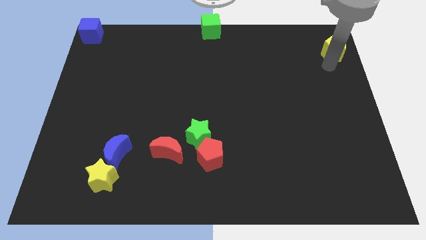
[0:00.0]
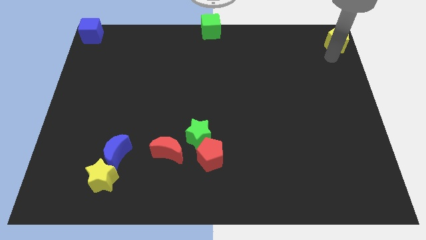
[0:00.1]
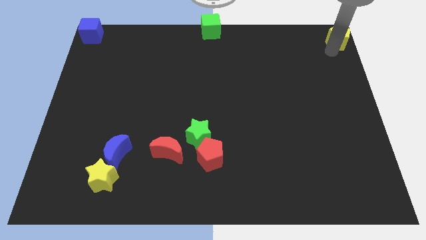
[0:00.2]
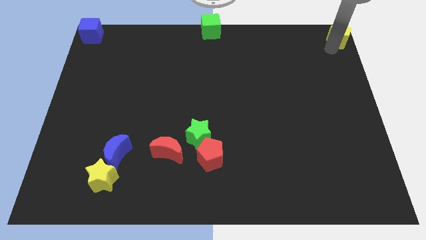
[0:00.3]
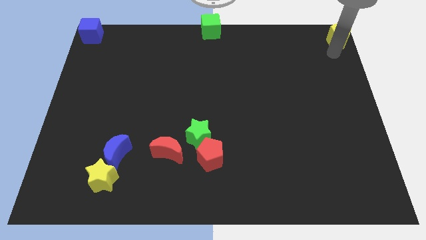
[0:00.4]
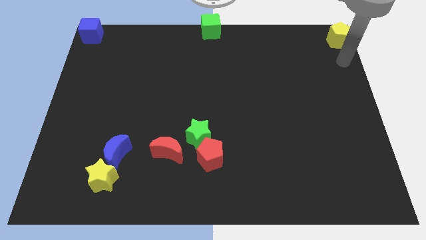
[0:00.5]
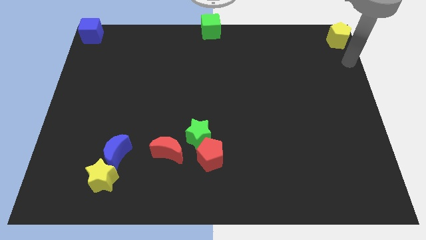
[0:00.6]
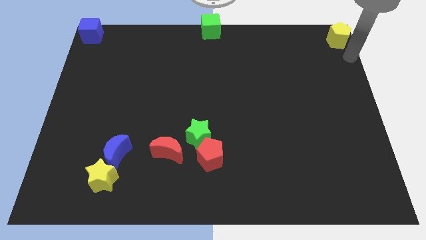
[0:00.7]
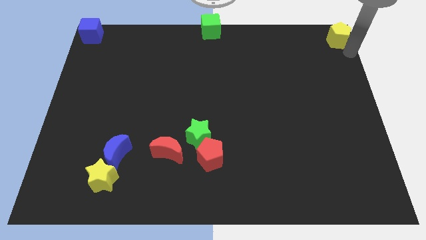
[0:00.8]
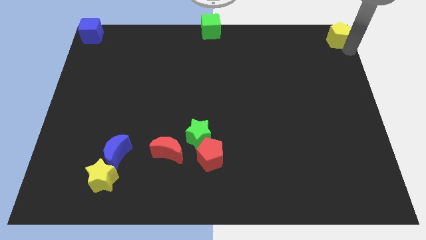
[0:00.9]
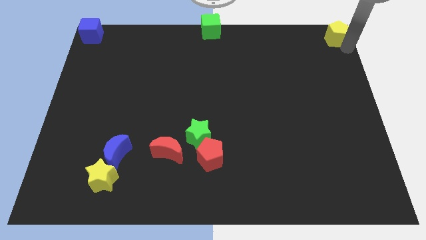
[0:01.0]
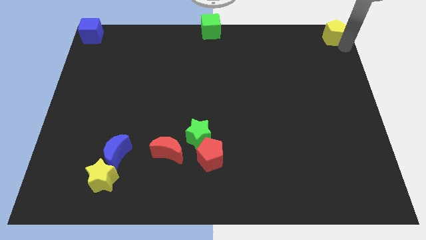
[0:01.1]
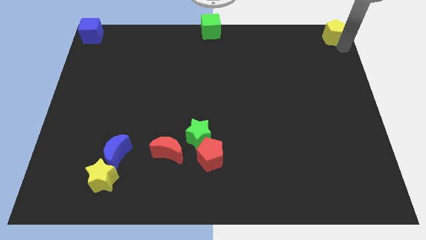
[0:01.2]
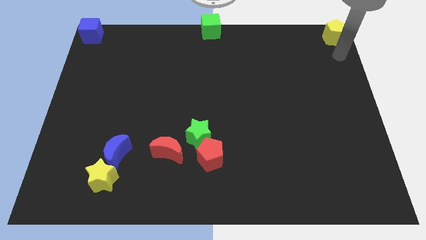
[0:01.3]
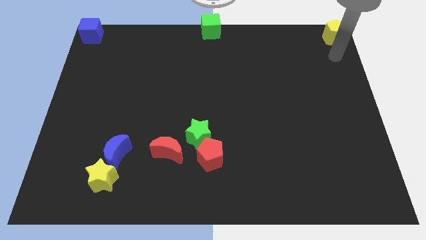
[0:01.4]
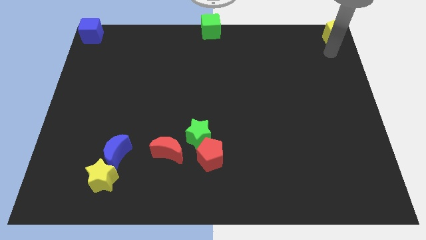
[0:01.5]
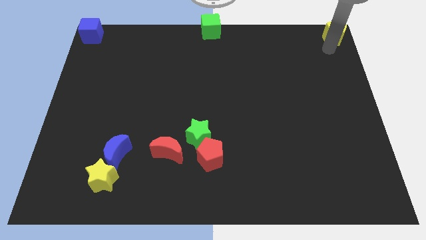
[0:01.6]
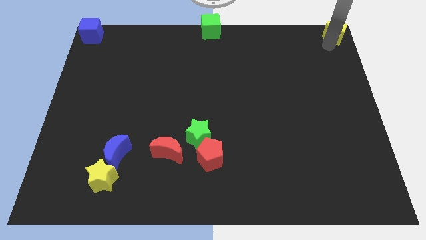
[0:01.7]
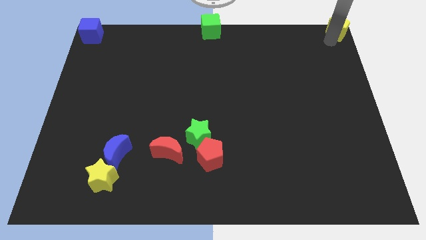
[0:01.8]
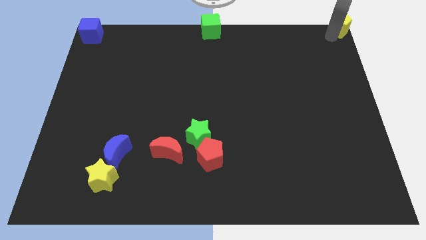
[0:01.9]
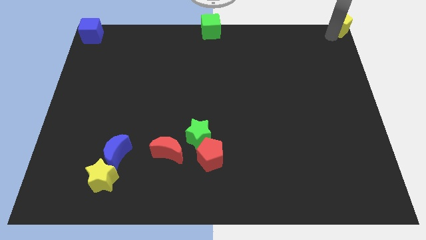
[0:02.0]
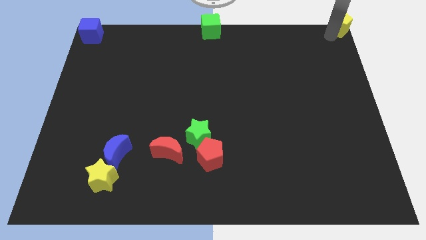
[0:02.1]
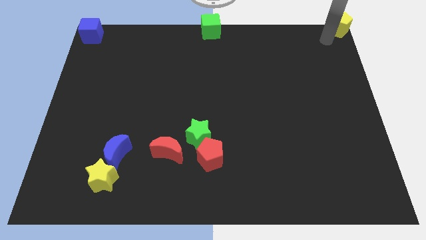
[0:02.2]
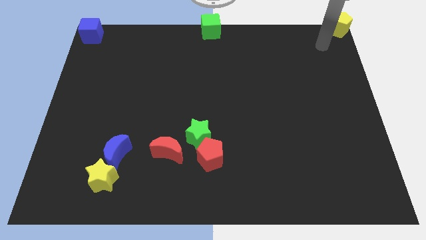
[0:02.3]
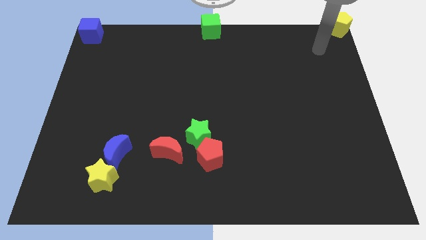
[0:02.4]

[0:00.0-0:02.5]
place the yellow pentagon at the top right corner of the board

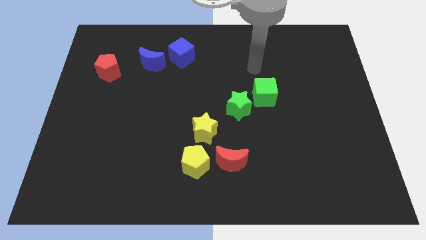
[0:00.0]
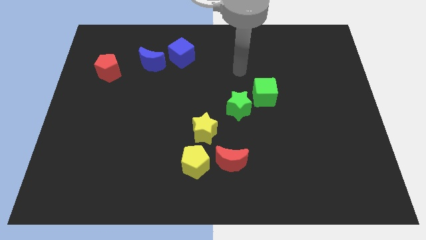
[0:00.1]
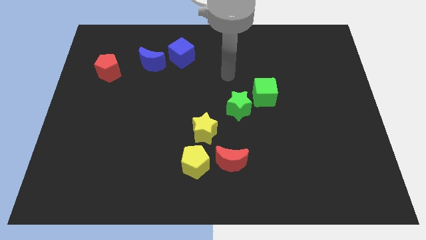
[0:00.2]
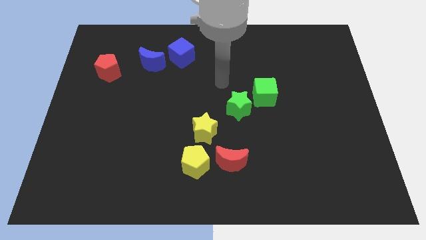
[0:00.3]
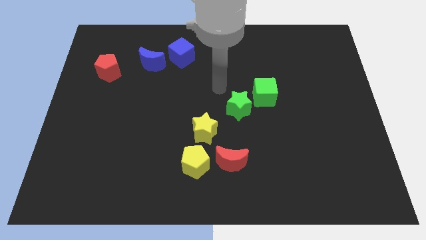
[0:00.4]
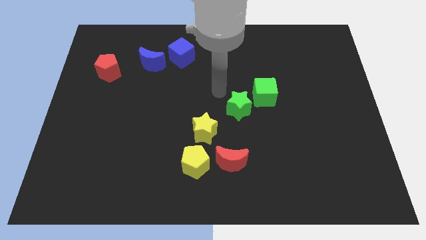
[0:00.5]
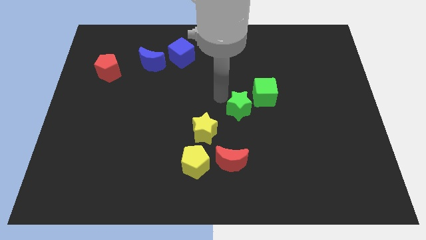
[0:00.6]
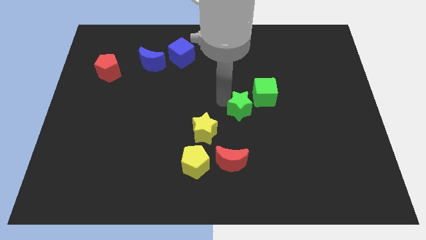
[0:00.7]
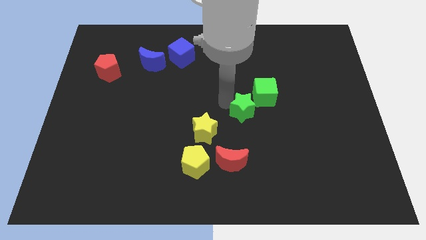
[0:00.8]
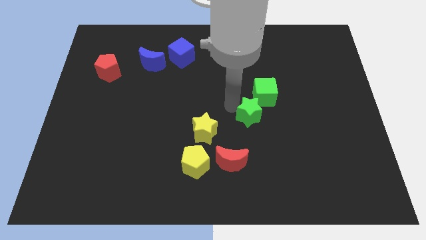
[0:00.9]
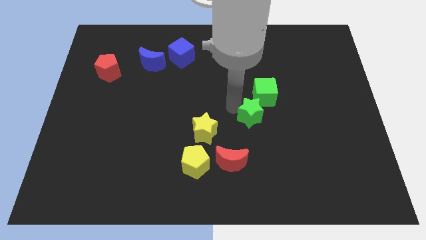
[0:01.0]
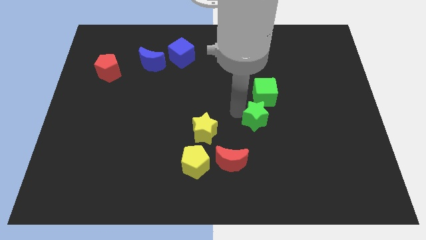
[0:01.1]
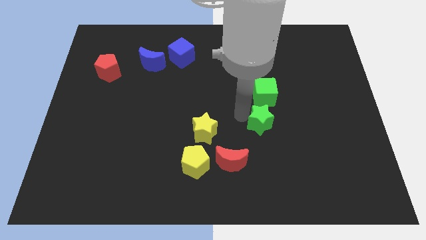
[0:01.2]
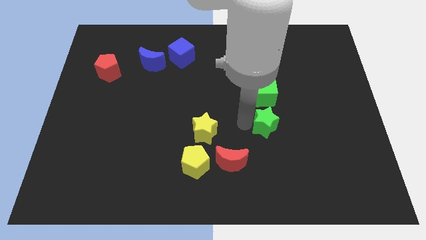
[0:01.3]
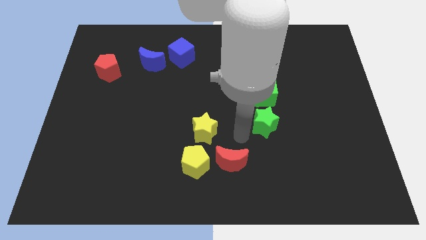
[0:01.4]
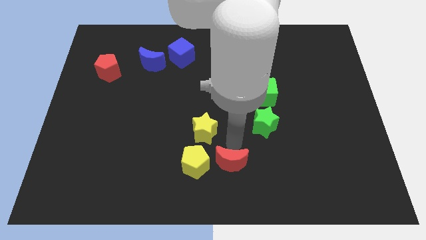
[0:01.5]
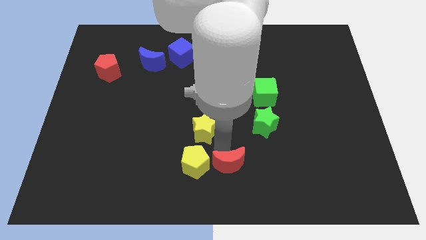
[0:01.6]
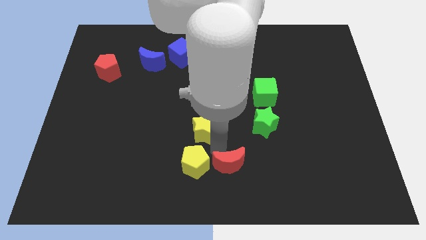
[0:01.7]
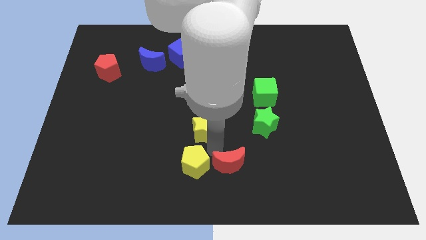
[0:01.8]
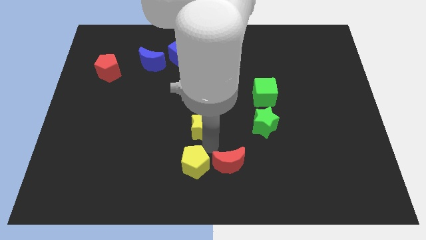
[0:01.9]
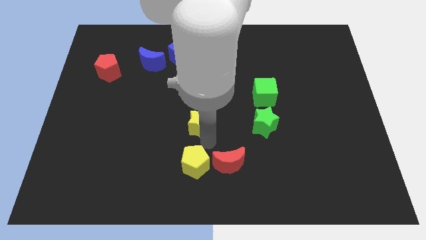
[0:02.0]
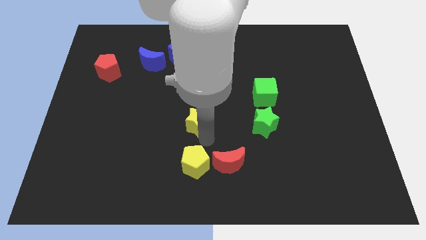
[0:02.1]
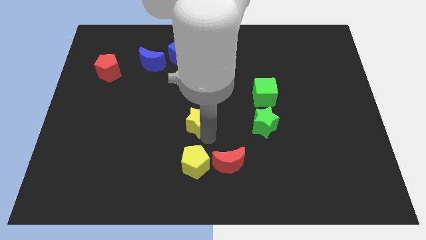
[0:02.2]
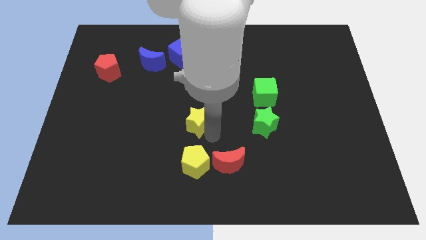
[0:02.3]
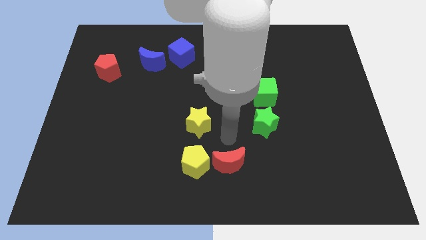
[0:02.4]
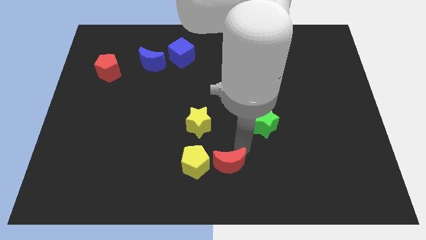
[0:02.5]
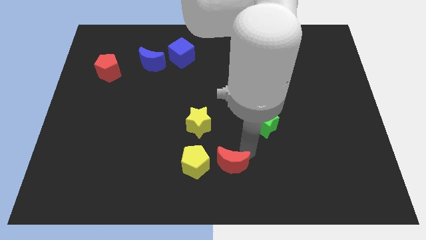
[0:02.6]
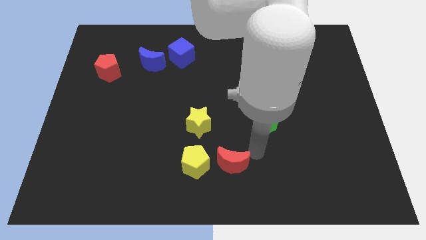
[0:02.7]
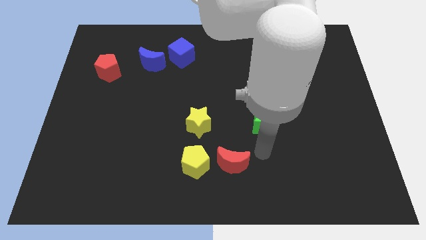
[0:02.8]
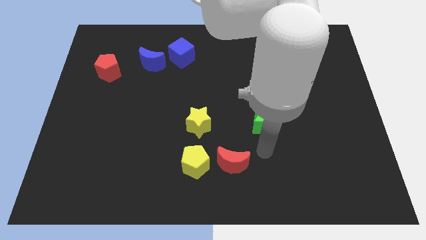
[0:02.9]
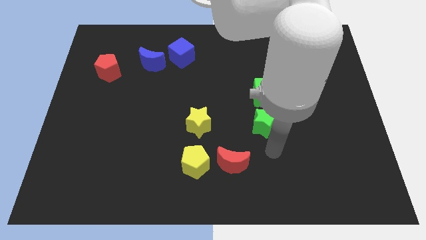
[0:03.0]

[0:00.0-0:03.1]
move the green star down to the green cube

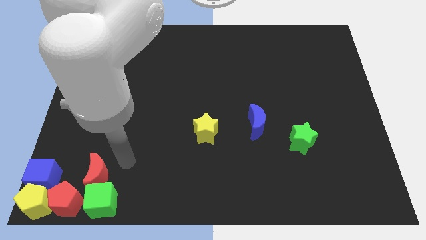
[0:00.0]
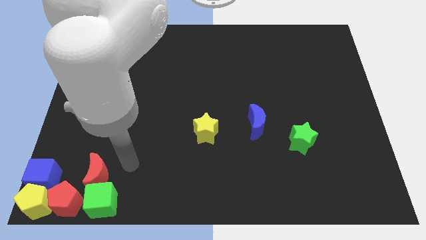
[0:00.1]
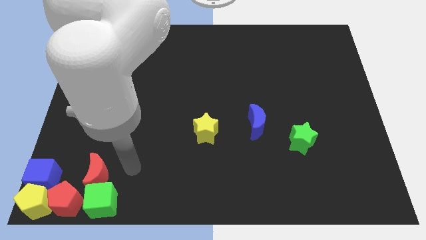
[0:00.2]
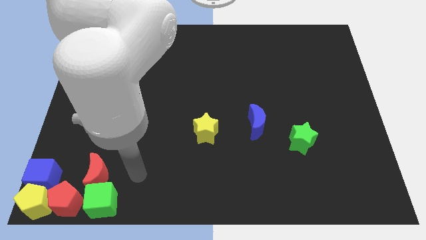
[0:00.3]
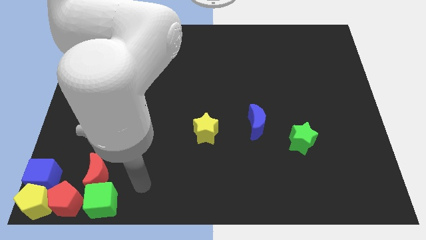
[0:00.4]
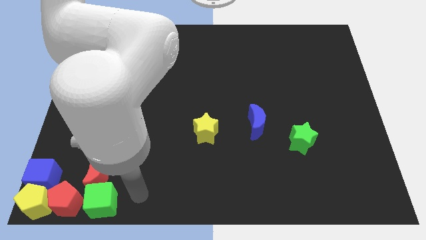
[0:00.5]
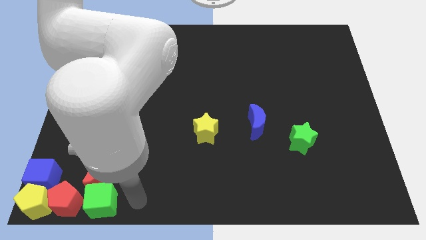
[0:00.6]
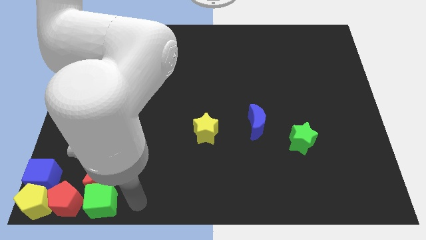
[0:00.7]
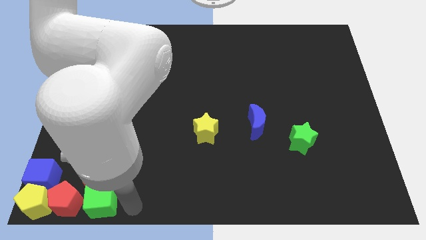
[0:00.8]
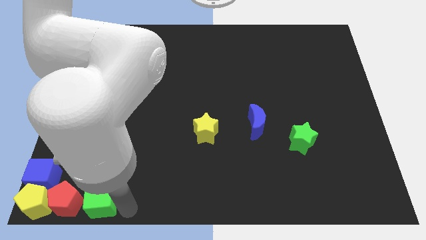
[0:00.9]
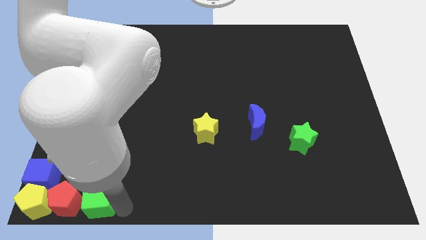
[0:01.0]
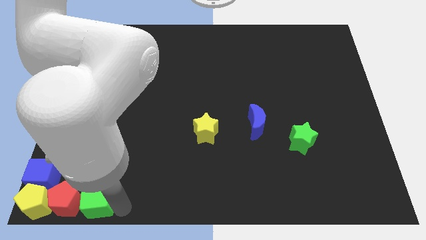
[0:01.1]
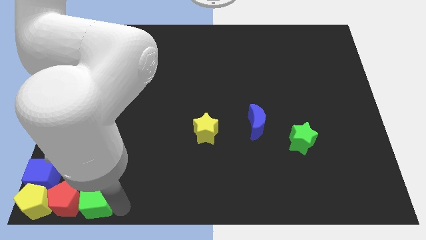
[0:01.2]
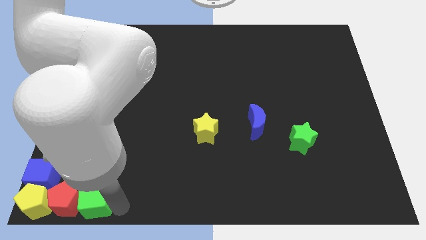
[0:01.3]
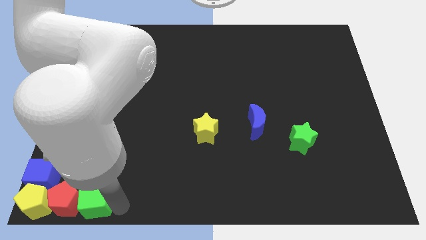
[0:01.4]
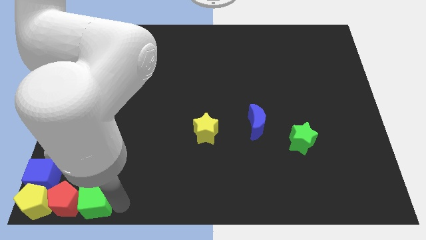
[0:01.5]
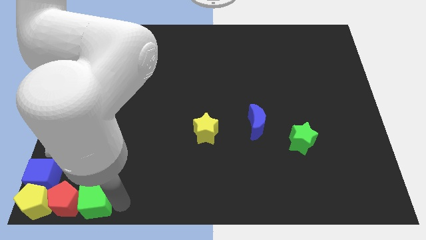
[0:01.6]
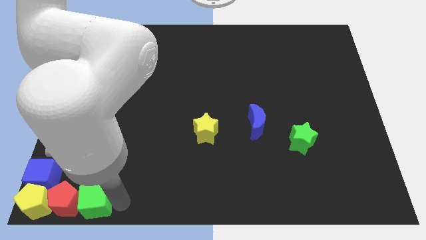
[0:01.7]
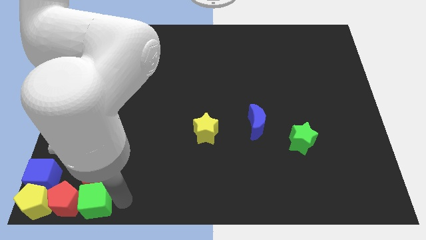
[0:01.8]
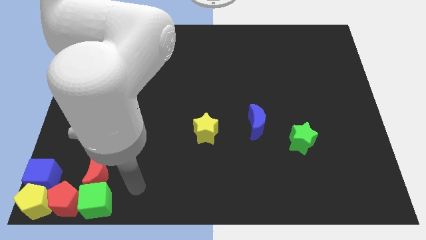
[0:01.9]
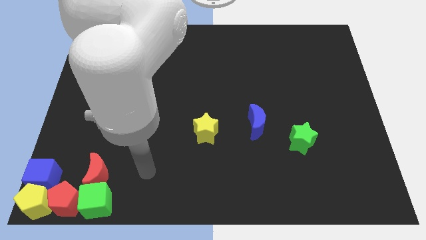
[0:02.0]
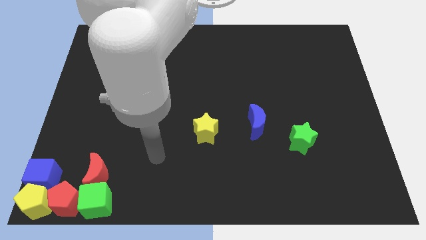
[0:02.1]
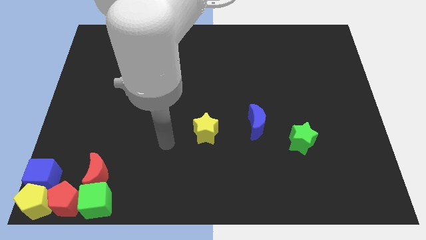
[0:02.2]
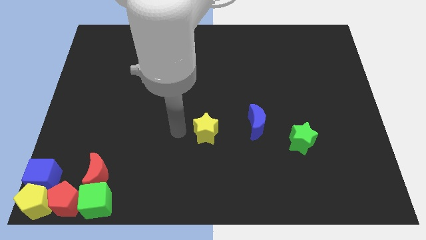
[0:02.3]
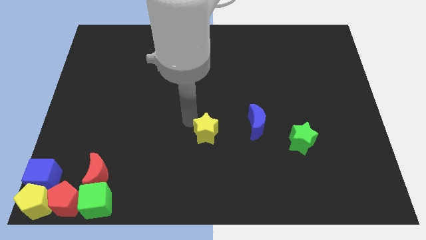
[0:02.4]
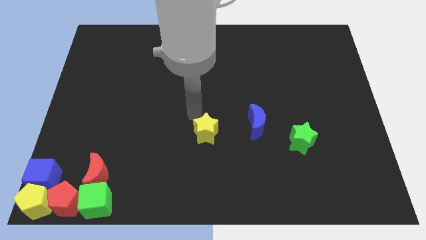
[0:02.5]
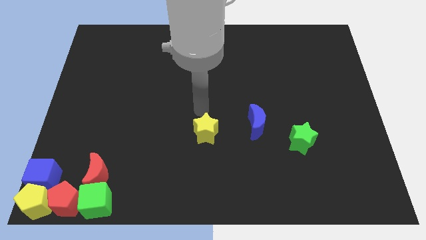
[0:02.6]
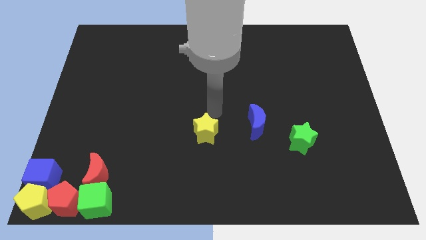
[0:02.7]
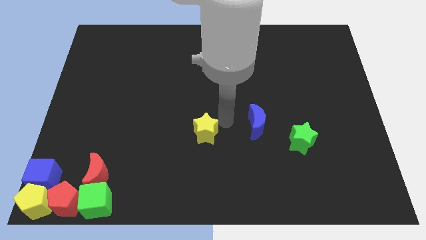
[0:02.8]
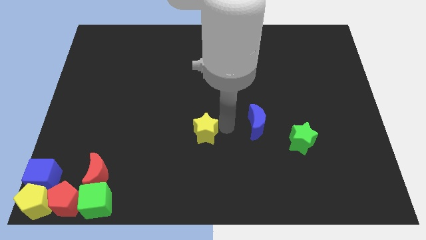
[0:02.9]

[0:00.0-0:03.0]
push the green cube slightly towards the red pentagon

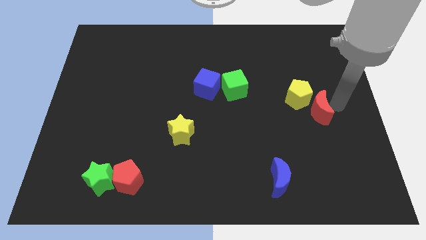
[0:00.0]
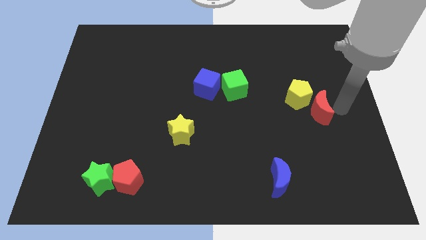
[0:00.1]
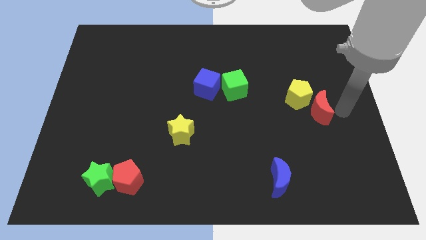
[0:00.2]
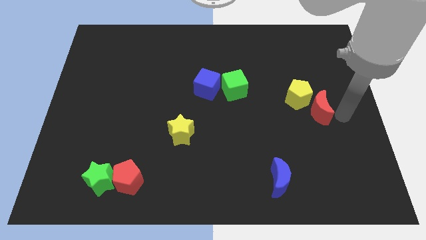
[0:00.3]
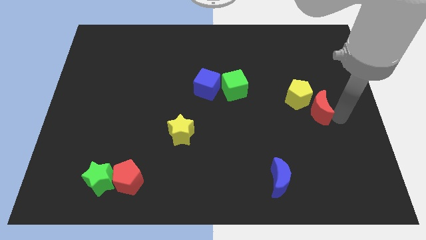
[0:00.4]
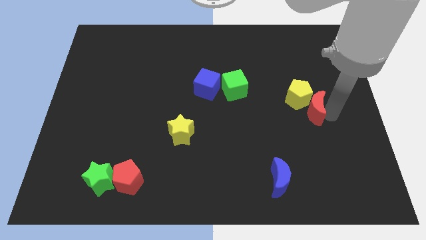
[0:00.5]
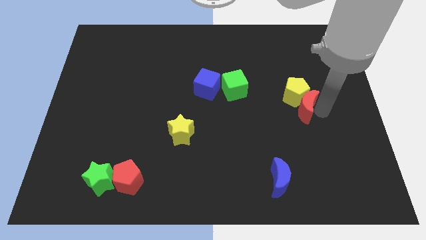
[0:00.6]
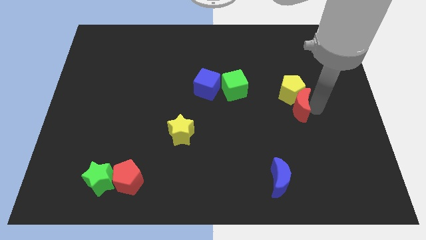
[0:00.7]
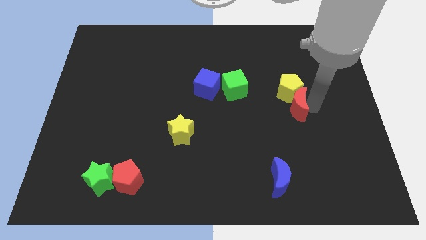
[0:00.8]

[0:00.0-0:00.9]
push the red crescent into yellow pentagon
